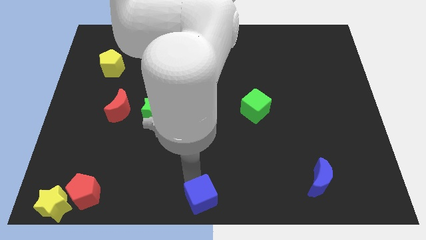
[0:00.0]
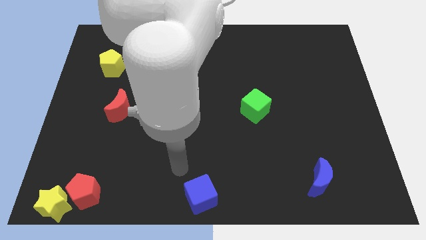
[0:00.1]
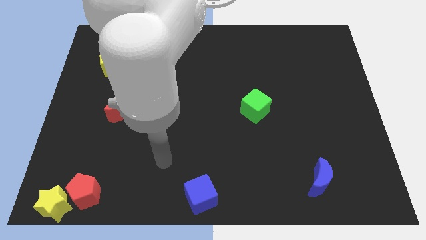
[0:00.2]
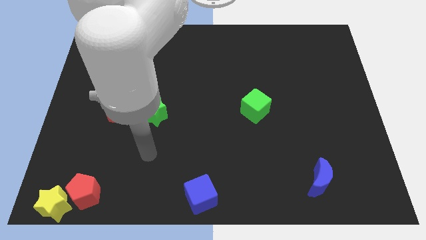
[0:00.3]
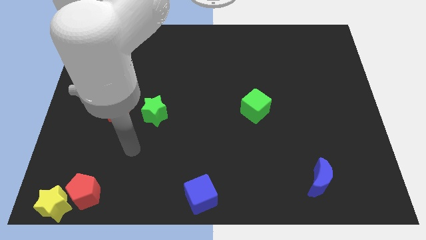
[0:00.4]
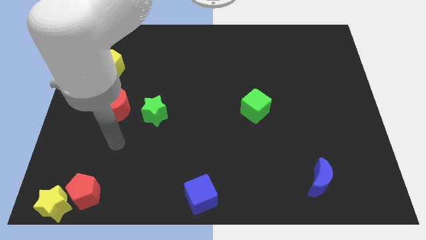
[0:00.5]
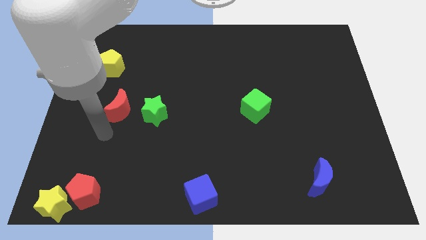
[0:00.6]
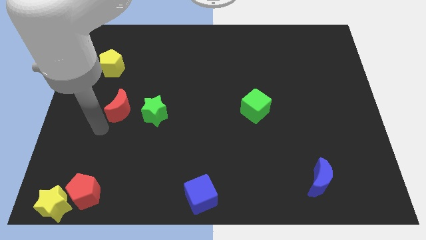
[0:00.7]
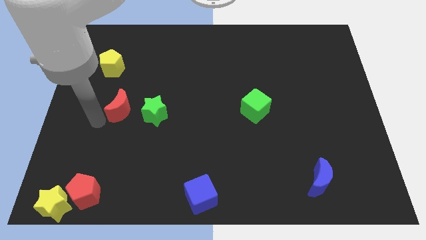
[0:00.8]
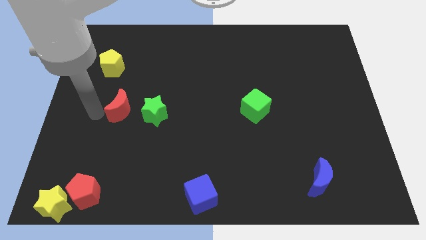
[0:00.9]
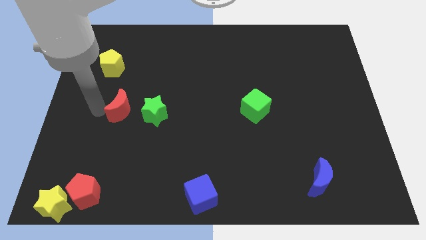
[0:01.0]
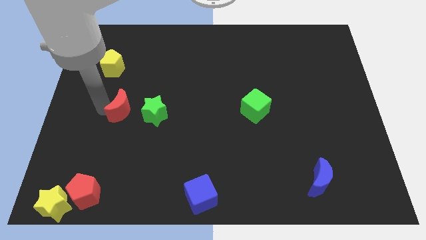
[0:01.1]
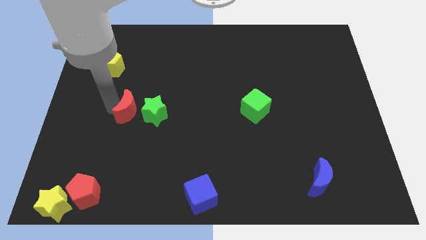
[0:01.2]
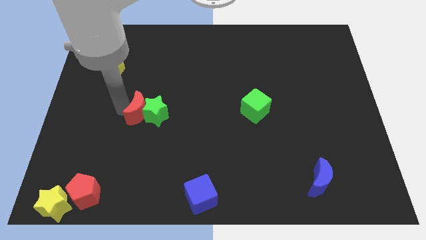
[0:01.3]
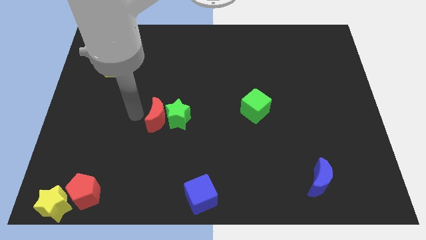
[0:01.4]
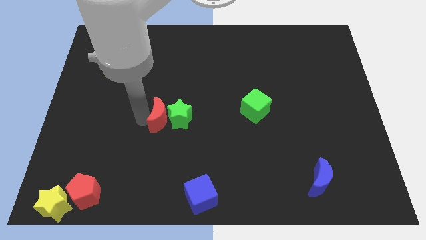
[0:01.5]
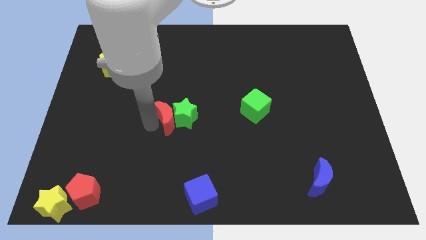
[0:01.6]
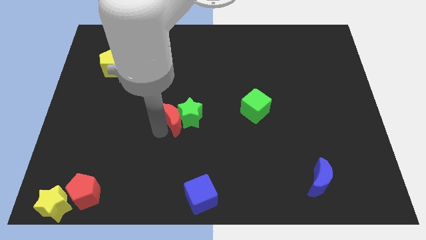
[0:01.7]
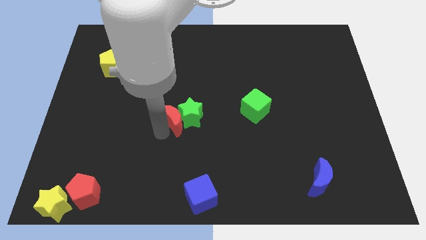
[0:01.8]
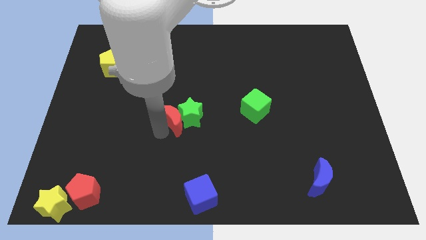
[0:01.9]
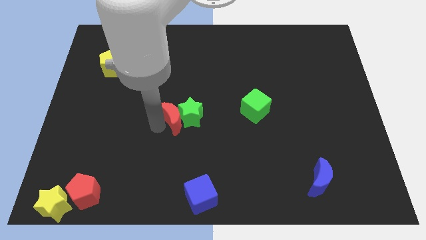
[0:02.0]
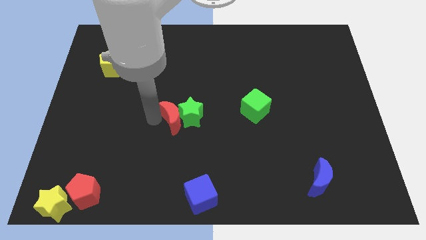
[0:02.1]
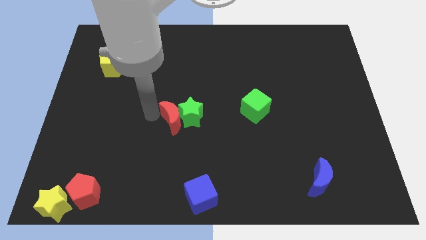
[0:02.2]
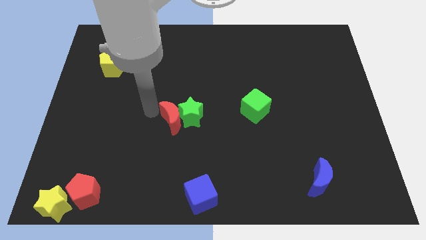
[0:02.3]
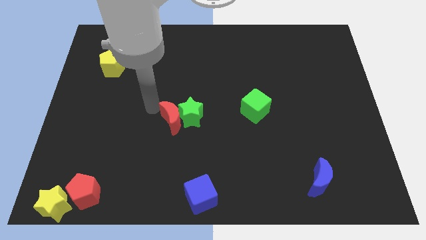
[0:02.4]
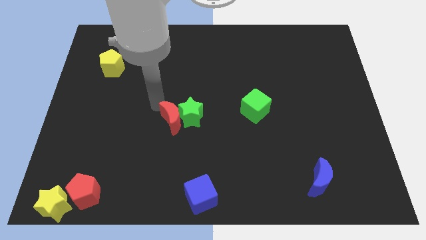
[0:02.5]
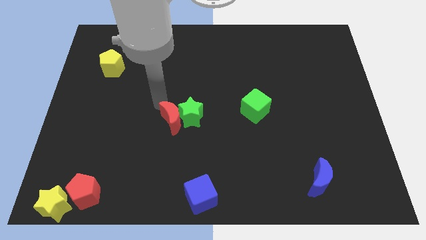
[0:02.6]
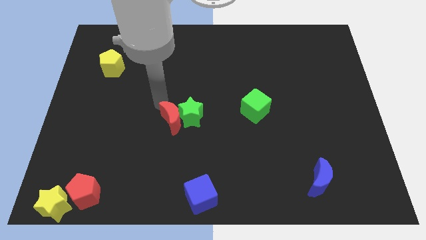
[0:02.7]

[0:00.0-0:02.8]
push the red crescent along with the green star to the top of the blue cube

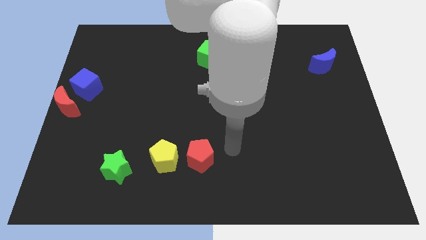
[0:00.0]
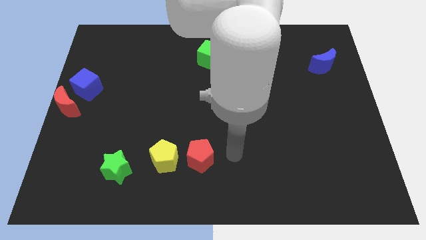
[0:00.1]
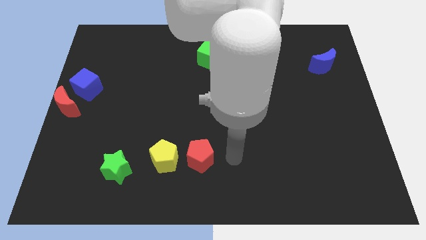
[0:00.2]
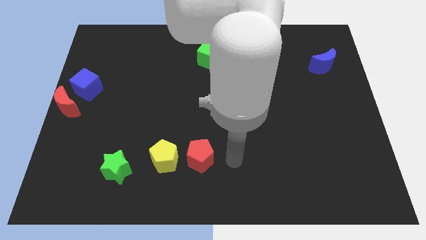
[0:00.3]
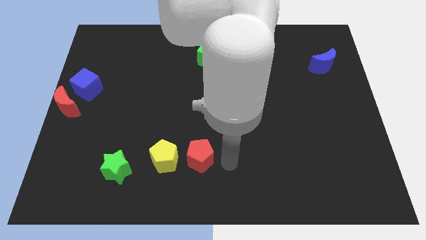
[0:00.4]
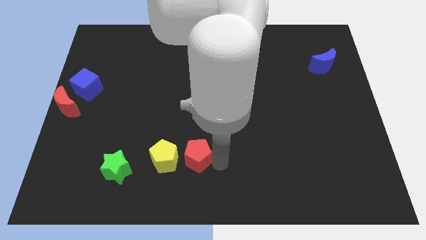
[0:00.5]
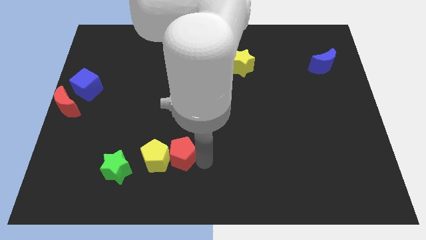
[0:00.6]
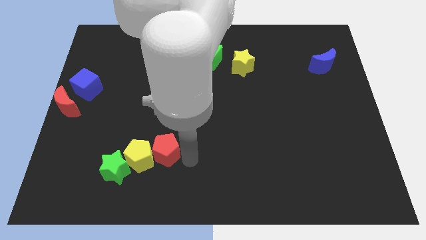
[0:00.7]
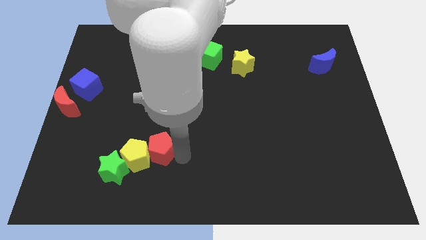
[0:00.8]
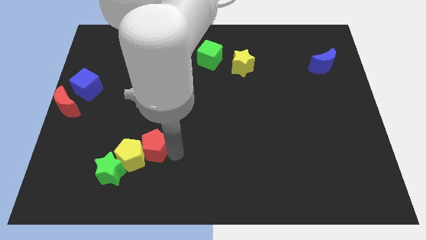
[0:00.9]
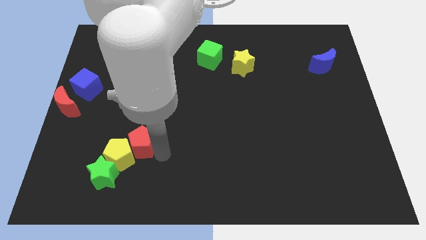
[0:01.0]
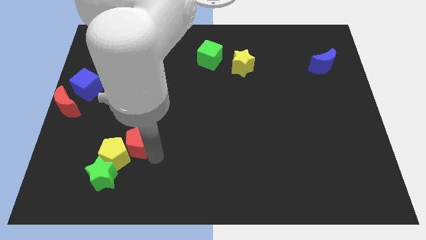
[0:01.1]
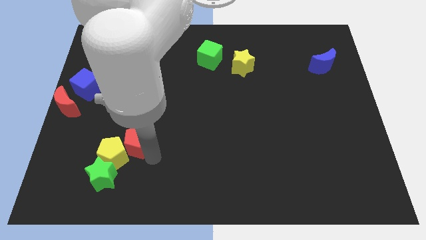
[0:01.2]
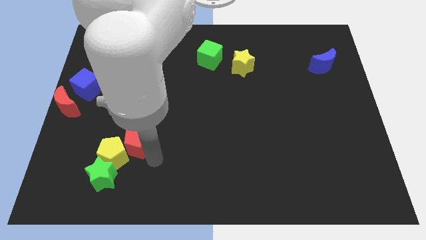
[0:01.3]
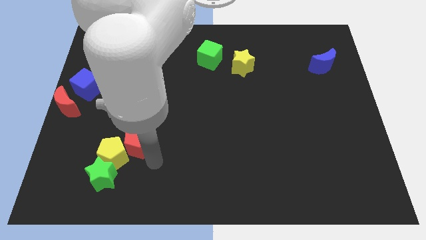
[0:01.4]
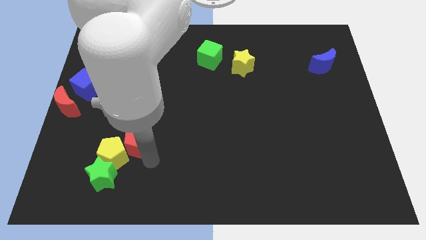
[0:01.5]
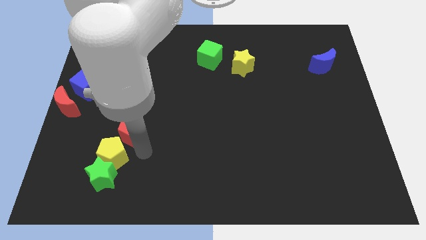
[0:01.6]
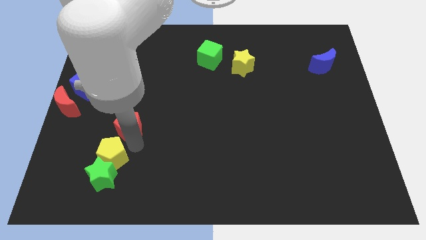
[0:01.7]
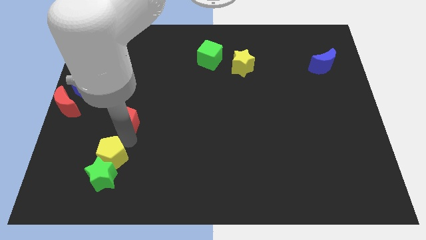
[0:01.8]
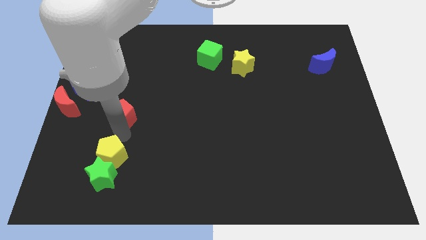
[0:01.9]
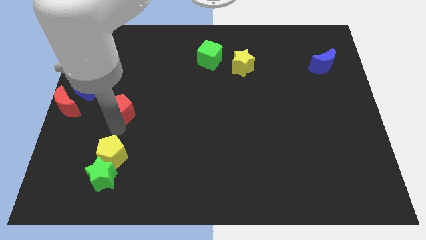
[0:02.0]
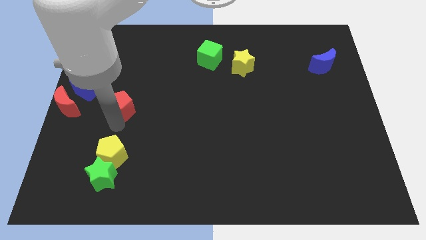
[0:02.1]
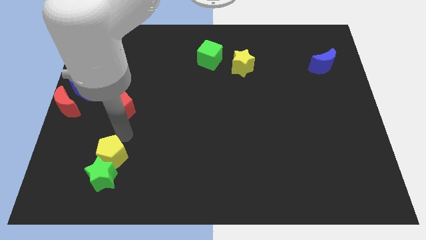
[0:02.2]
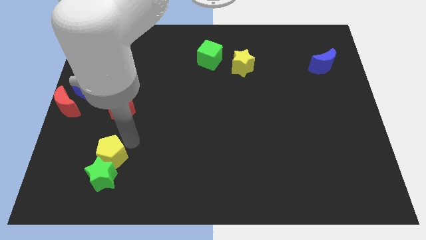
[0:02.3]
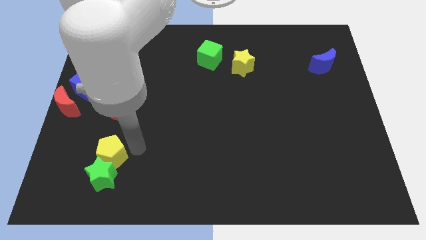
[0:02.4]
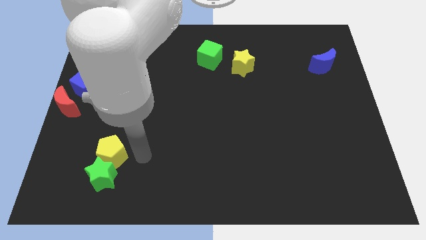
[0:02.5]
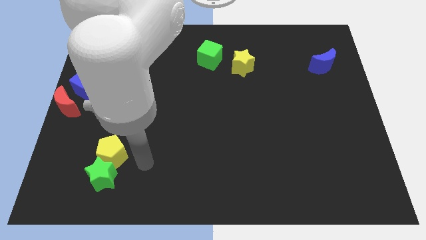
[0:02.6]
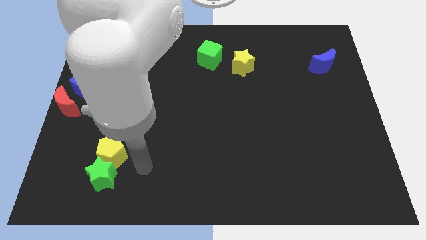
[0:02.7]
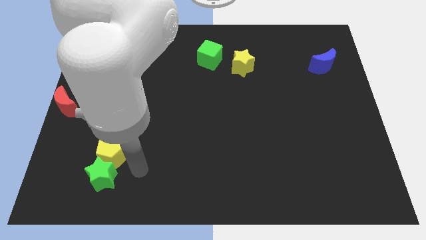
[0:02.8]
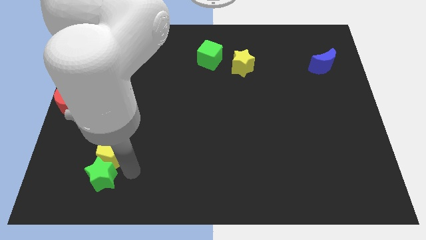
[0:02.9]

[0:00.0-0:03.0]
slide the red pentagon above the yellow pentagon

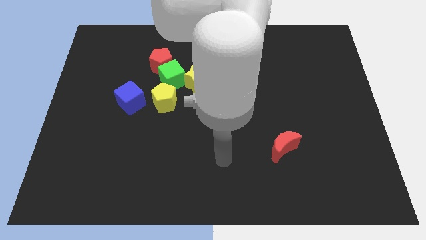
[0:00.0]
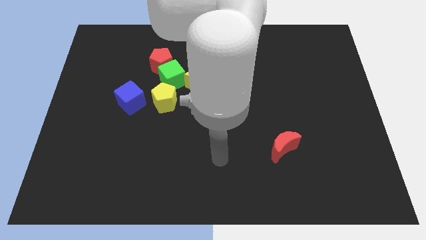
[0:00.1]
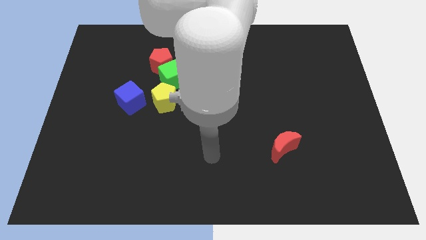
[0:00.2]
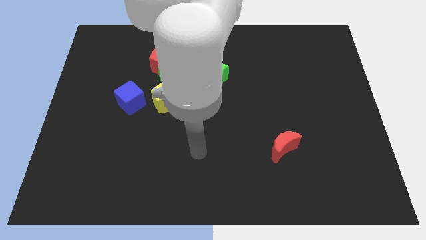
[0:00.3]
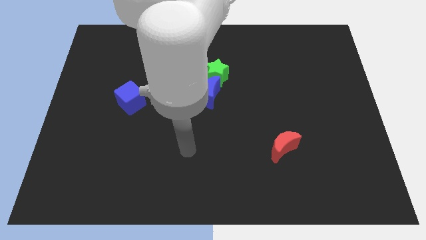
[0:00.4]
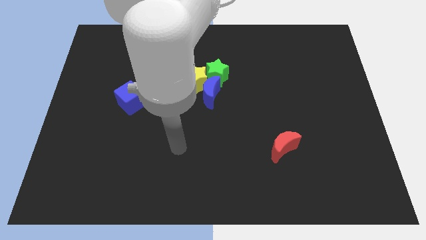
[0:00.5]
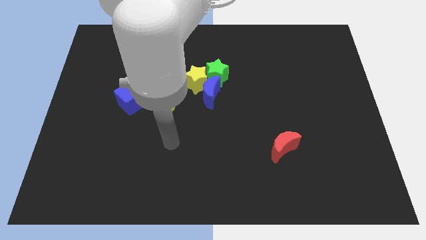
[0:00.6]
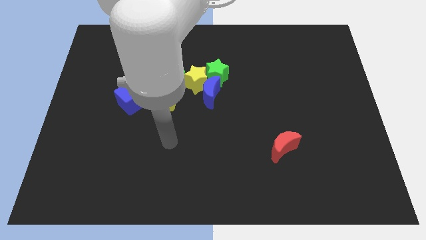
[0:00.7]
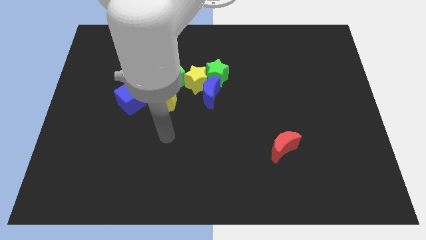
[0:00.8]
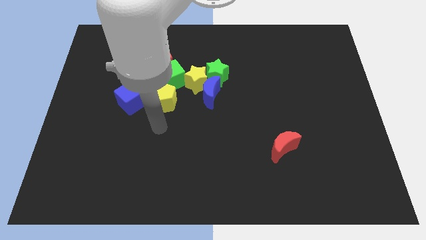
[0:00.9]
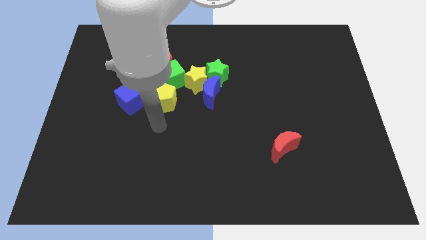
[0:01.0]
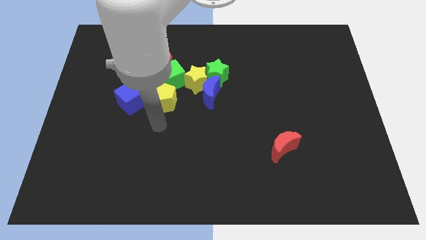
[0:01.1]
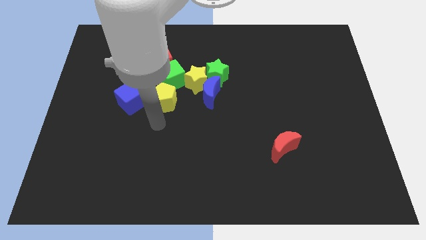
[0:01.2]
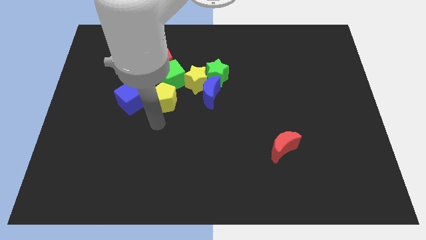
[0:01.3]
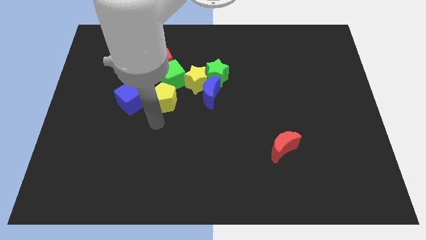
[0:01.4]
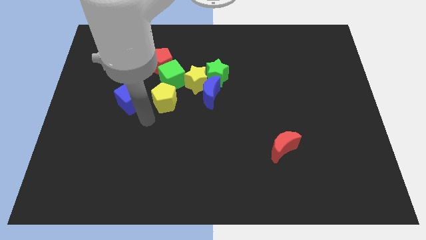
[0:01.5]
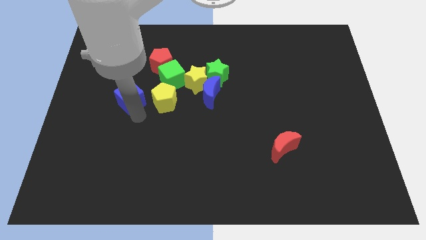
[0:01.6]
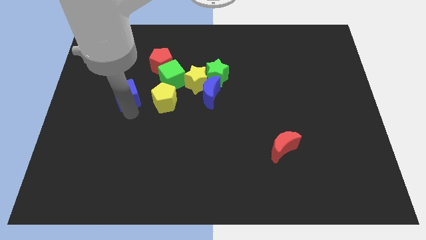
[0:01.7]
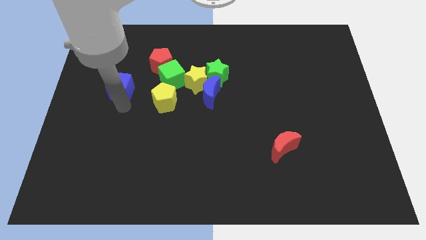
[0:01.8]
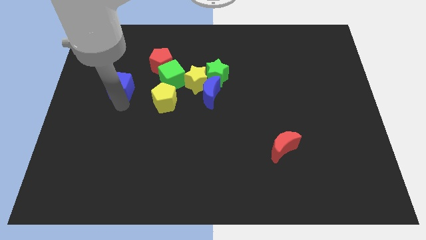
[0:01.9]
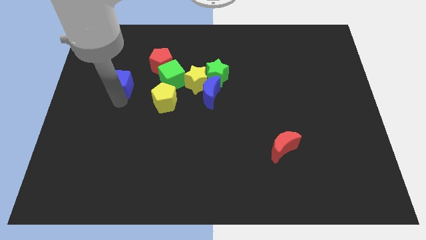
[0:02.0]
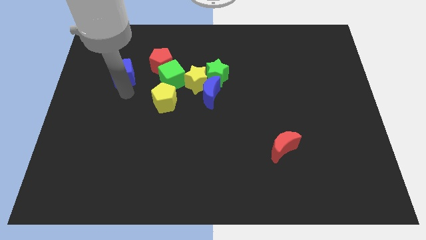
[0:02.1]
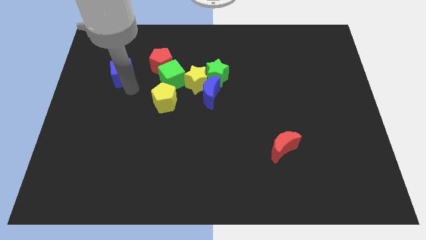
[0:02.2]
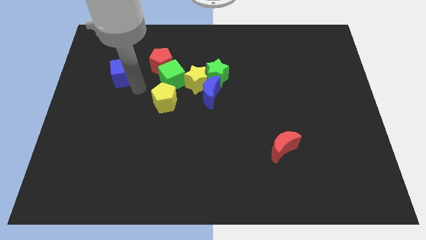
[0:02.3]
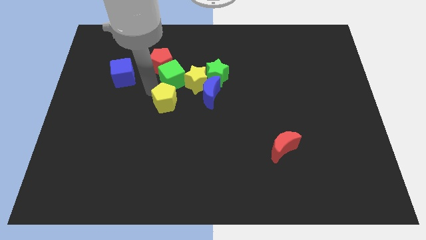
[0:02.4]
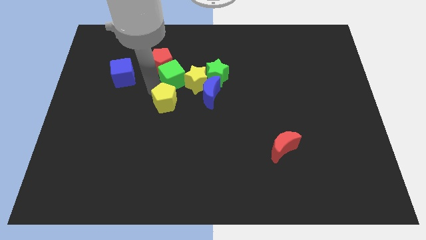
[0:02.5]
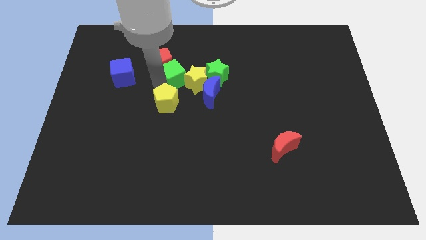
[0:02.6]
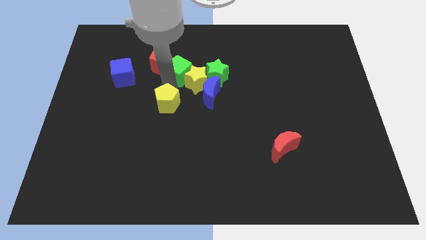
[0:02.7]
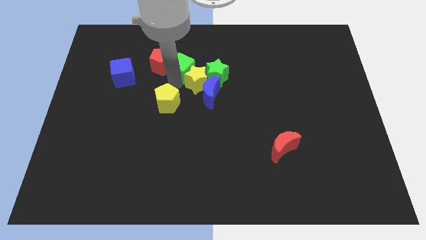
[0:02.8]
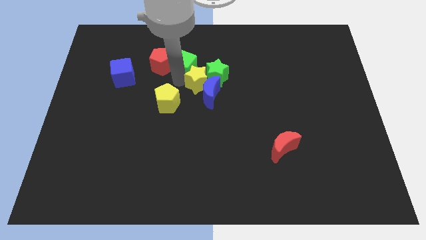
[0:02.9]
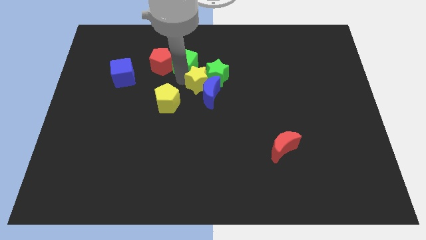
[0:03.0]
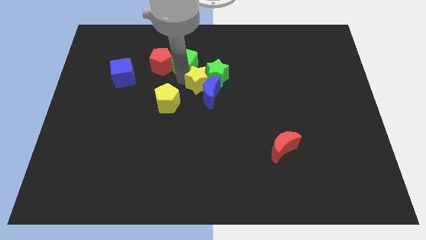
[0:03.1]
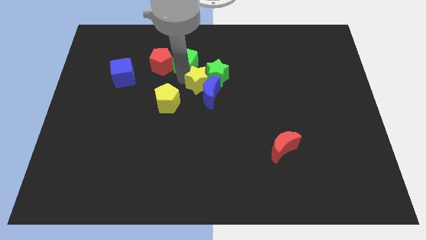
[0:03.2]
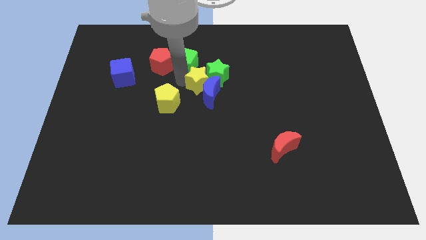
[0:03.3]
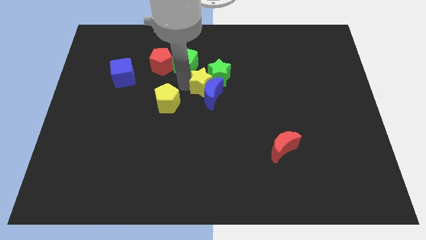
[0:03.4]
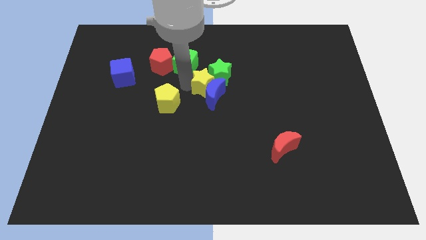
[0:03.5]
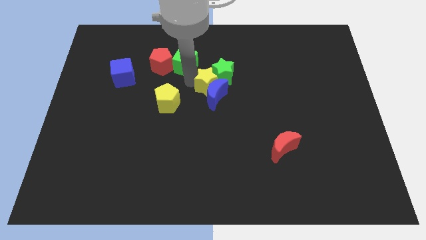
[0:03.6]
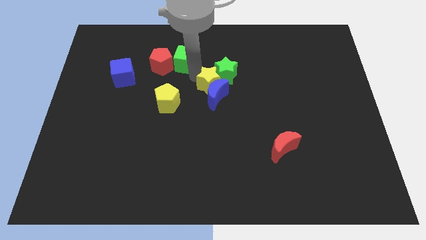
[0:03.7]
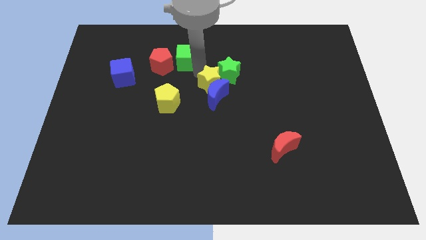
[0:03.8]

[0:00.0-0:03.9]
move the blue cube and the green cube diagonal to red pentagon
